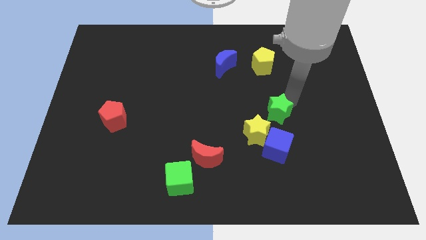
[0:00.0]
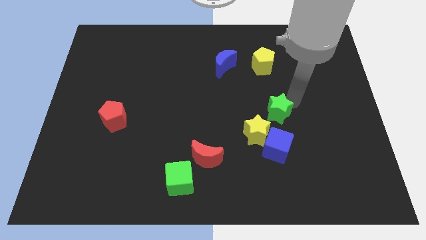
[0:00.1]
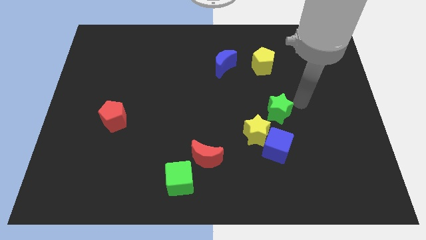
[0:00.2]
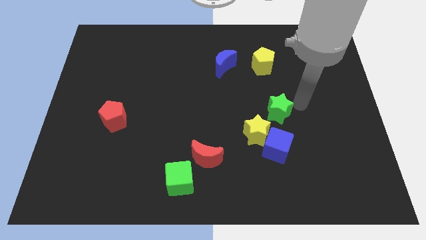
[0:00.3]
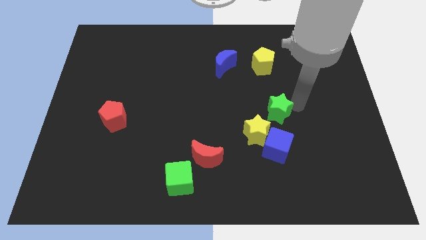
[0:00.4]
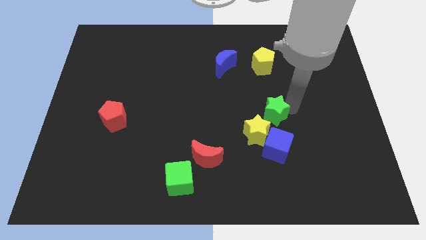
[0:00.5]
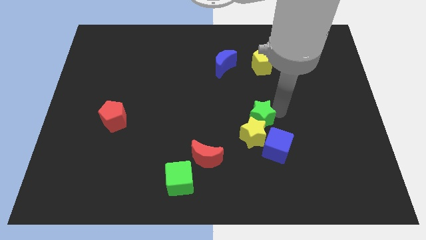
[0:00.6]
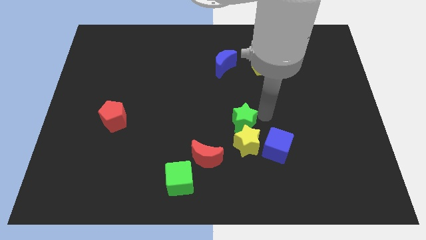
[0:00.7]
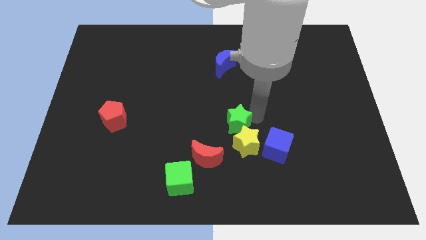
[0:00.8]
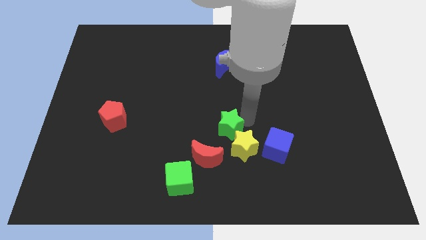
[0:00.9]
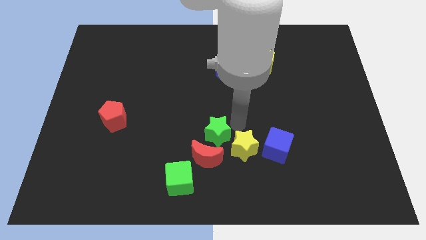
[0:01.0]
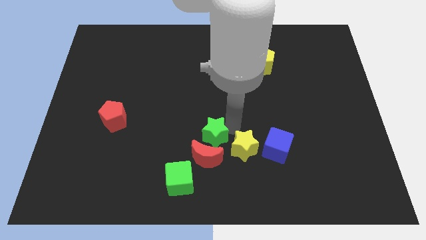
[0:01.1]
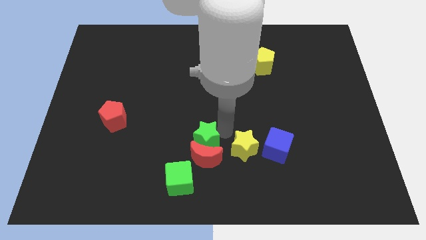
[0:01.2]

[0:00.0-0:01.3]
put the green star on the top of the red crescent

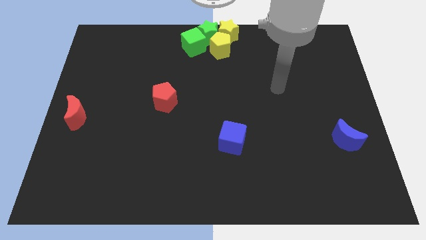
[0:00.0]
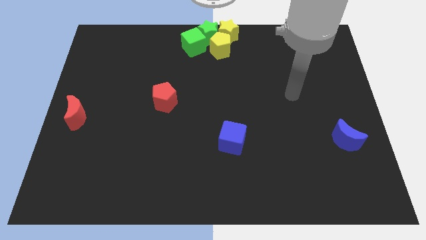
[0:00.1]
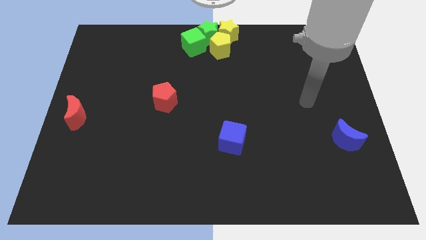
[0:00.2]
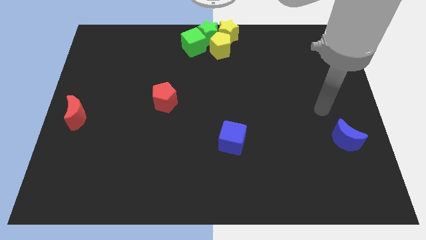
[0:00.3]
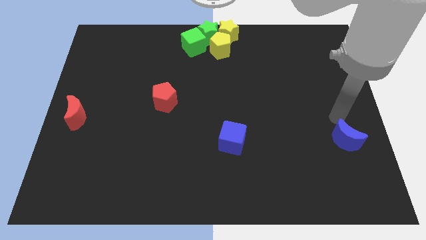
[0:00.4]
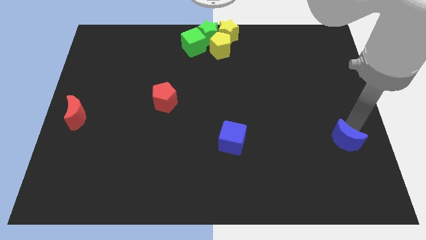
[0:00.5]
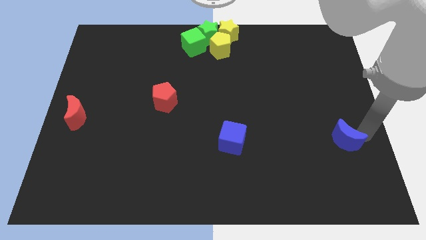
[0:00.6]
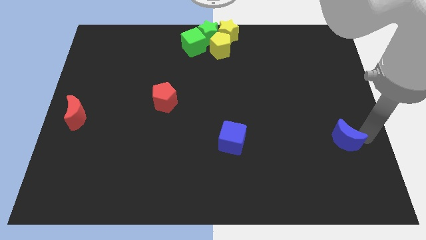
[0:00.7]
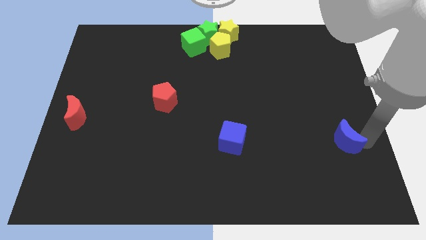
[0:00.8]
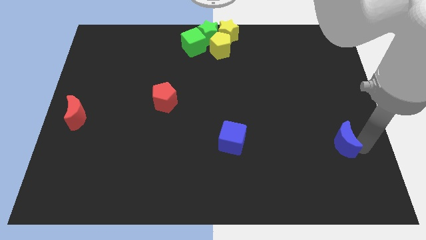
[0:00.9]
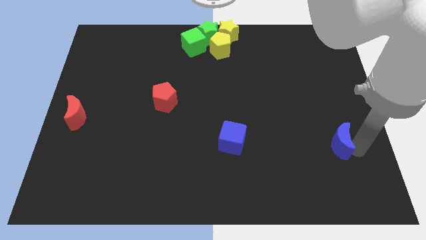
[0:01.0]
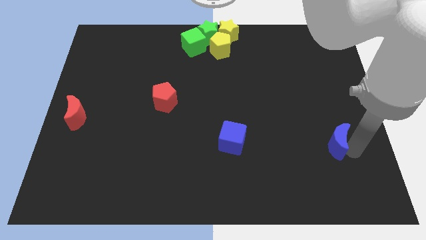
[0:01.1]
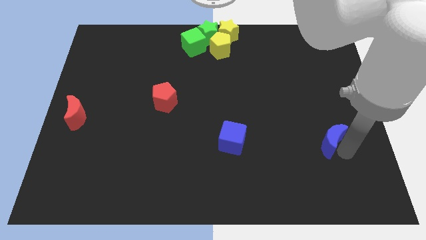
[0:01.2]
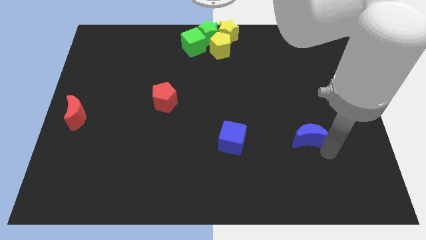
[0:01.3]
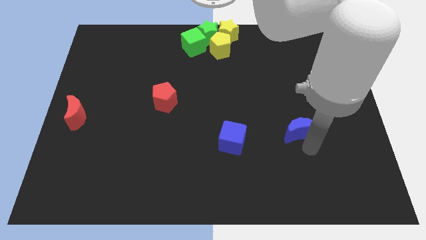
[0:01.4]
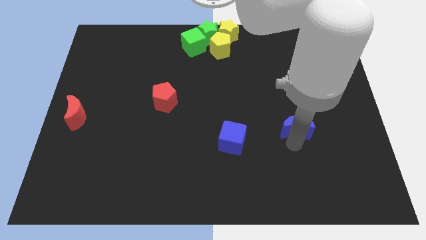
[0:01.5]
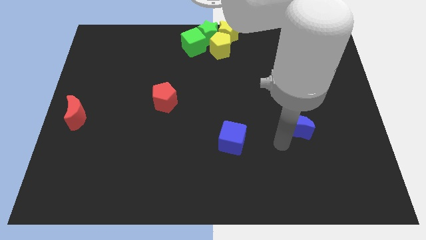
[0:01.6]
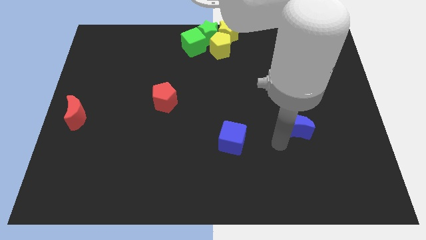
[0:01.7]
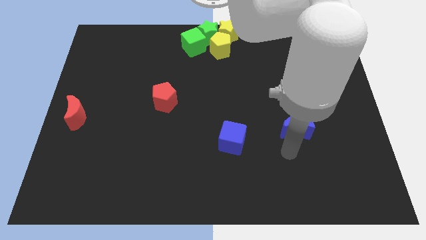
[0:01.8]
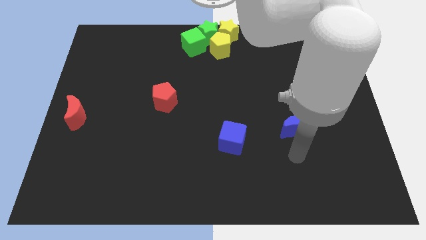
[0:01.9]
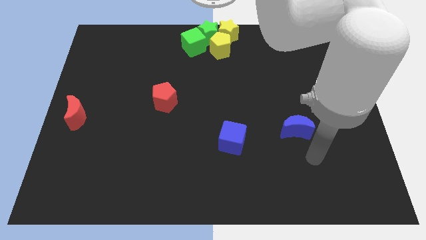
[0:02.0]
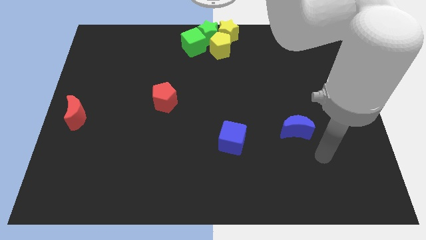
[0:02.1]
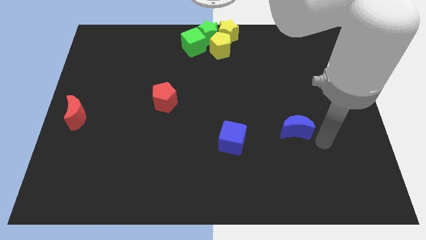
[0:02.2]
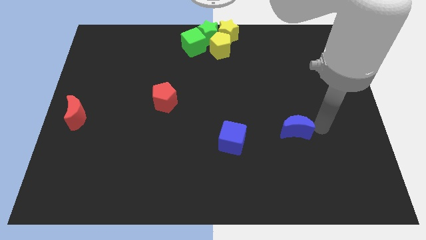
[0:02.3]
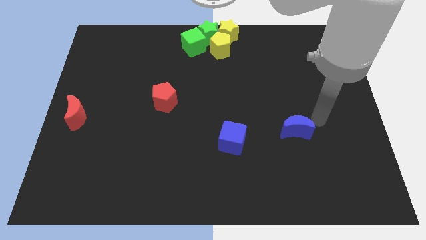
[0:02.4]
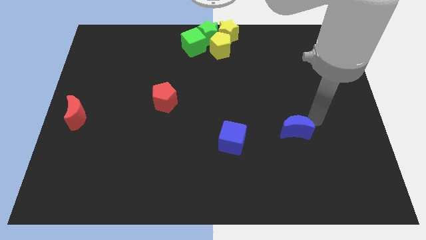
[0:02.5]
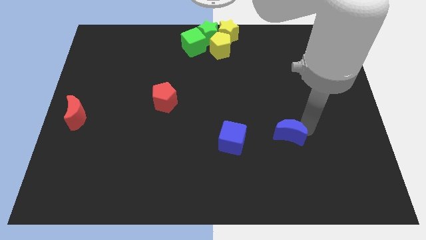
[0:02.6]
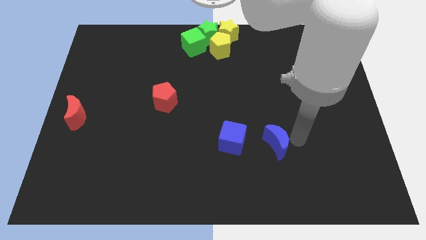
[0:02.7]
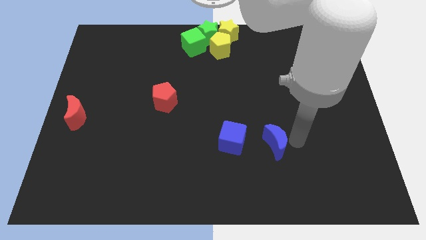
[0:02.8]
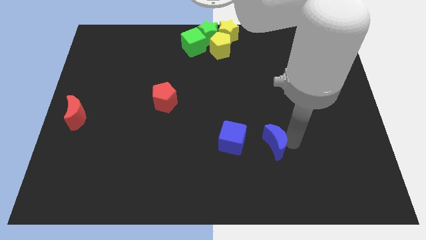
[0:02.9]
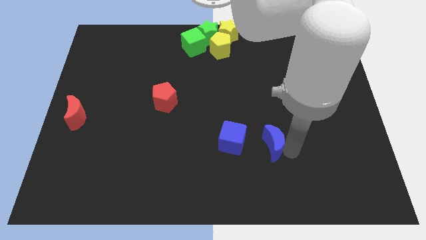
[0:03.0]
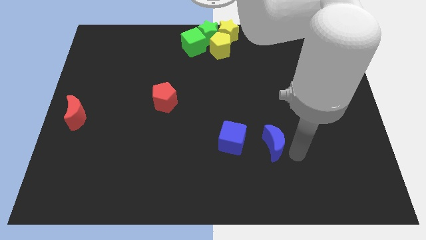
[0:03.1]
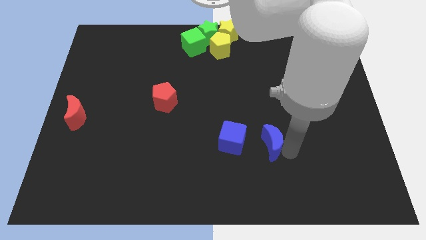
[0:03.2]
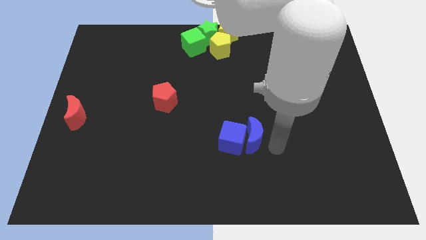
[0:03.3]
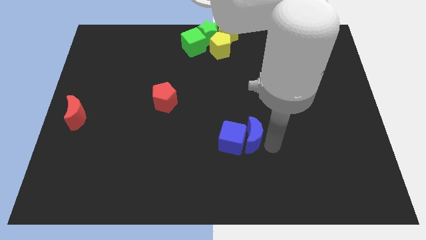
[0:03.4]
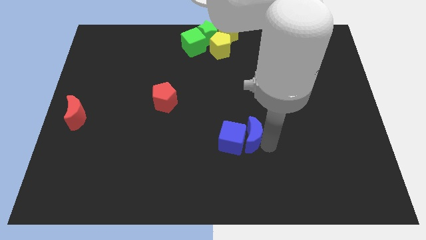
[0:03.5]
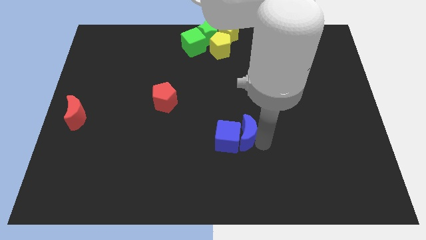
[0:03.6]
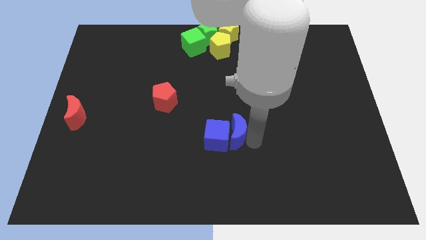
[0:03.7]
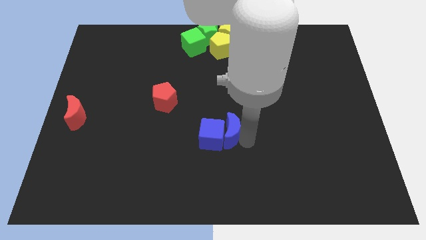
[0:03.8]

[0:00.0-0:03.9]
push the blue moon into the blue cube

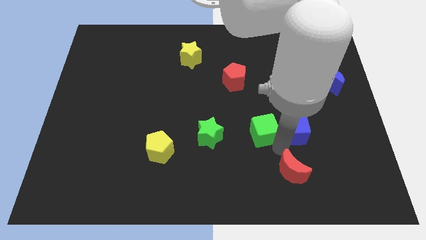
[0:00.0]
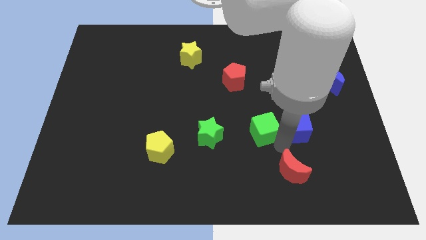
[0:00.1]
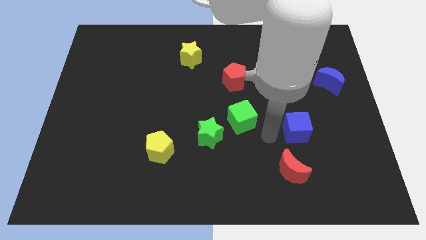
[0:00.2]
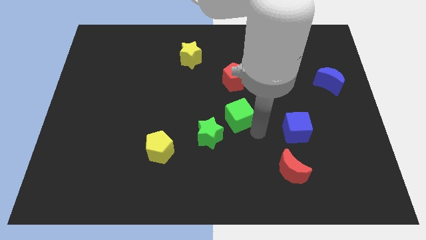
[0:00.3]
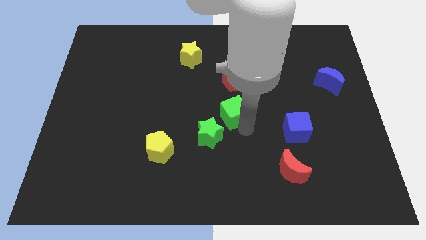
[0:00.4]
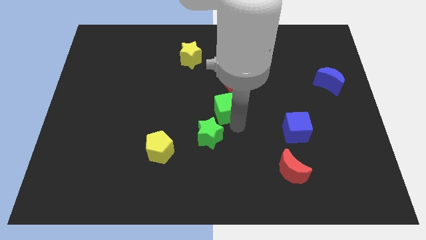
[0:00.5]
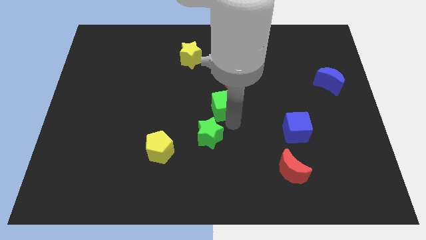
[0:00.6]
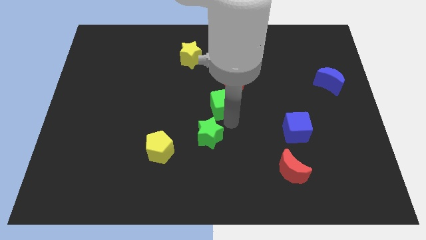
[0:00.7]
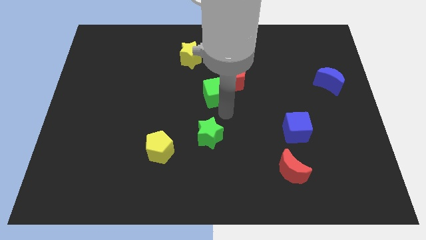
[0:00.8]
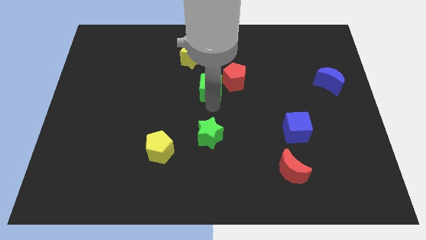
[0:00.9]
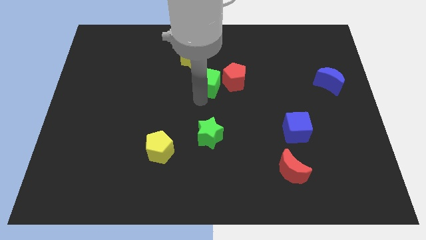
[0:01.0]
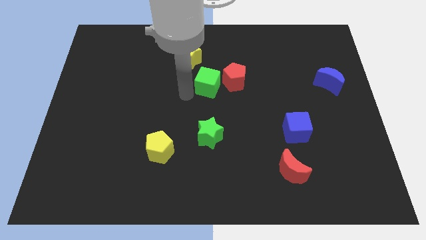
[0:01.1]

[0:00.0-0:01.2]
push green cube to the left of red pentagon

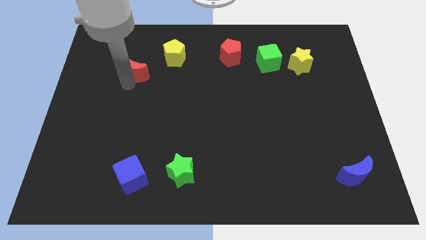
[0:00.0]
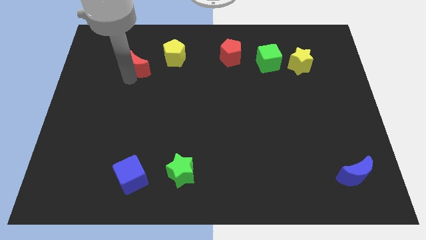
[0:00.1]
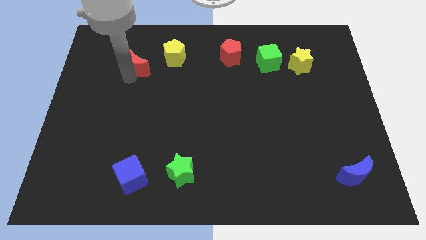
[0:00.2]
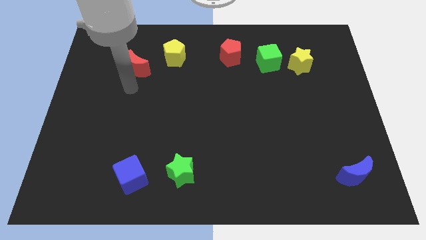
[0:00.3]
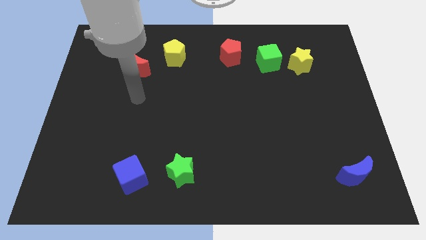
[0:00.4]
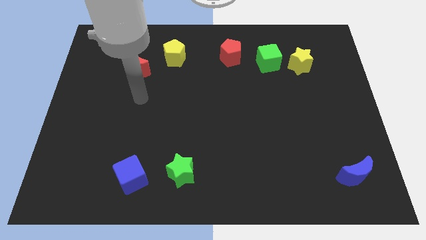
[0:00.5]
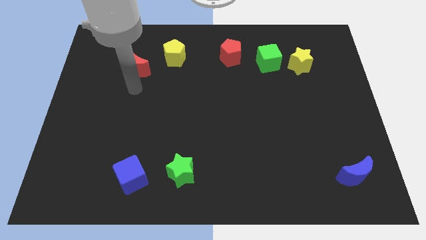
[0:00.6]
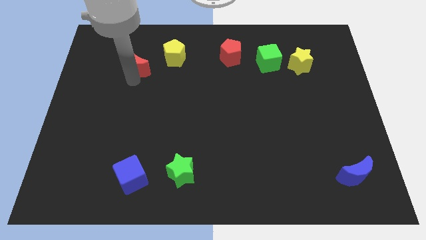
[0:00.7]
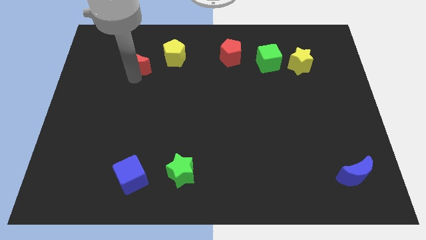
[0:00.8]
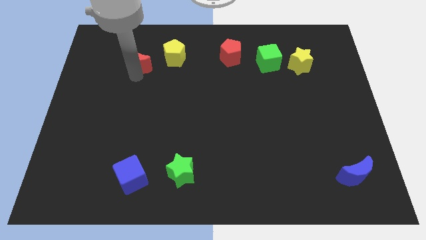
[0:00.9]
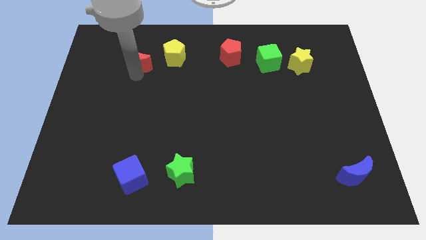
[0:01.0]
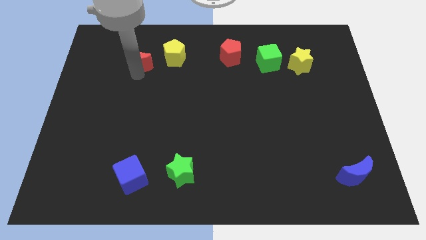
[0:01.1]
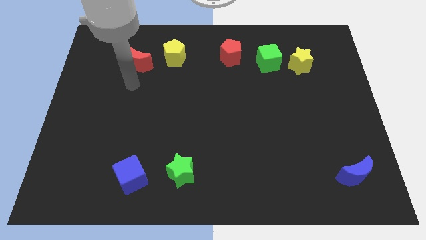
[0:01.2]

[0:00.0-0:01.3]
push the red moon left to the yellow pentagon

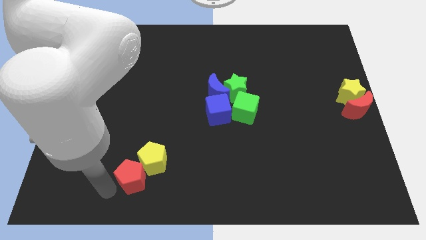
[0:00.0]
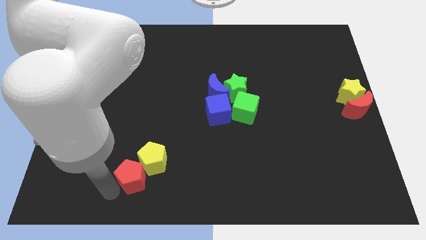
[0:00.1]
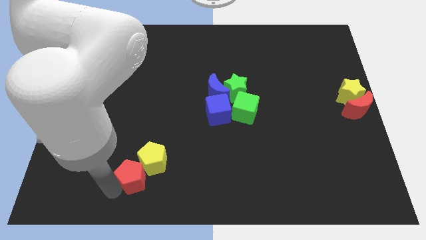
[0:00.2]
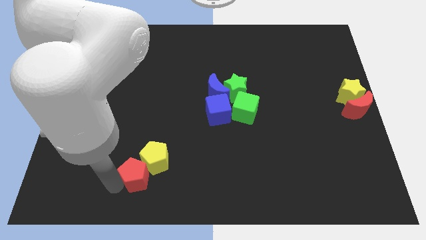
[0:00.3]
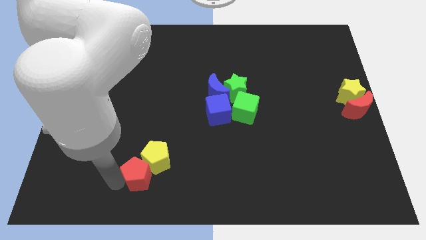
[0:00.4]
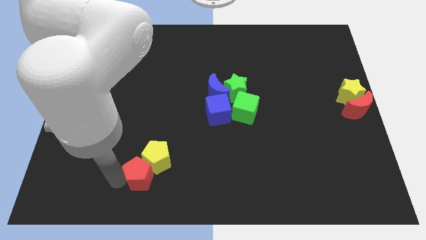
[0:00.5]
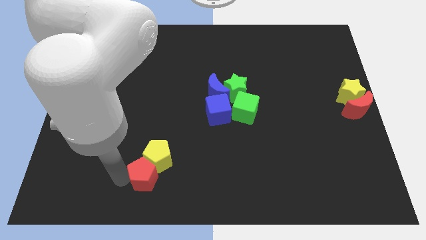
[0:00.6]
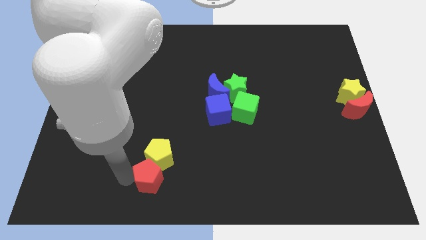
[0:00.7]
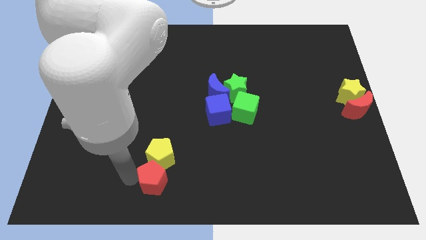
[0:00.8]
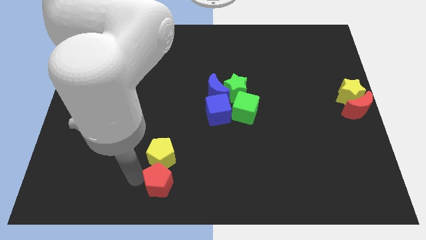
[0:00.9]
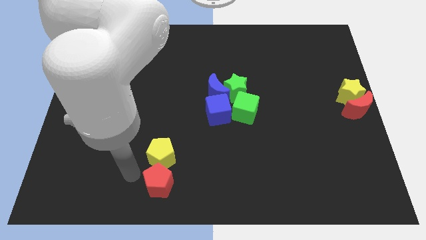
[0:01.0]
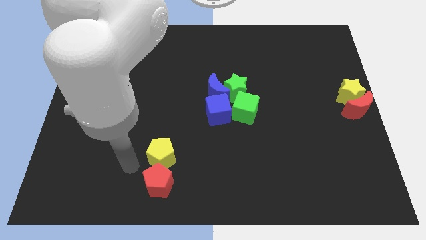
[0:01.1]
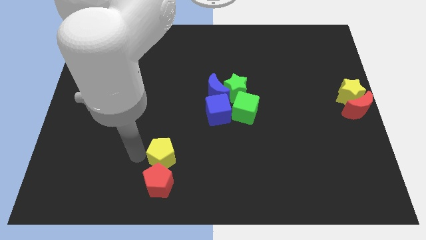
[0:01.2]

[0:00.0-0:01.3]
place the red pentagon below to the yeloow pentagon

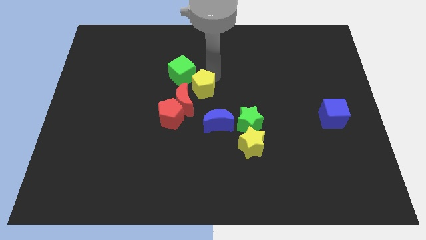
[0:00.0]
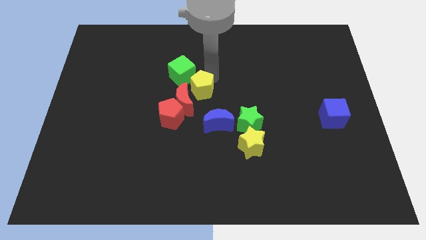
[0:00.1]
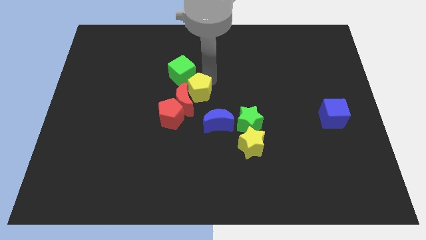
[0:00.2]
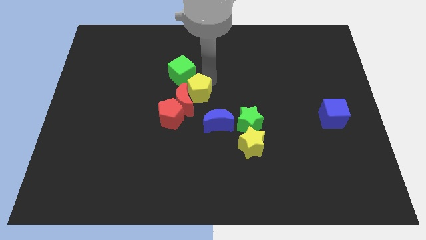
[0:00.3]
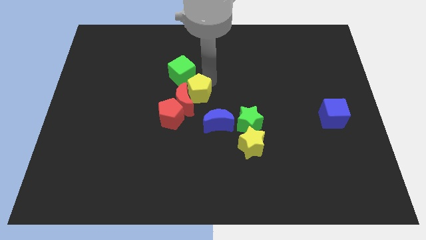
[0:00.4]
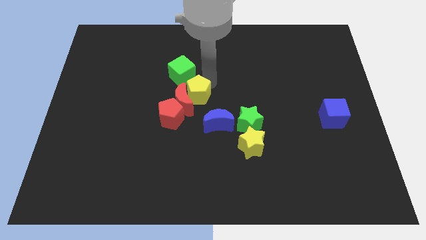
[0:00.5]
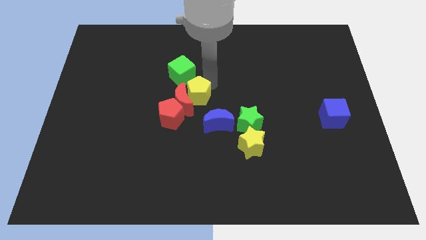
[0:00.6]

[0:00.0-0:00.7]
place the yellow pentagon to the center on the board
